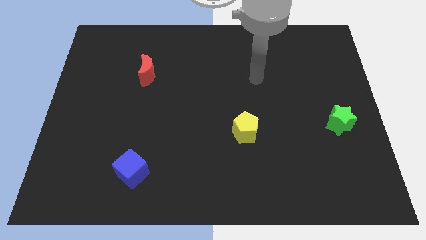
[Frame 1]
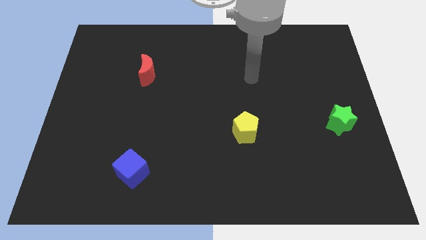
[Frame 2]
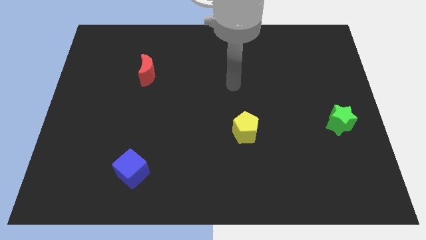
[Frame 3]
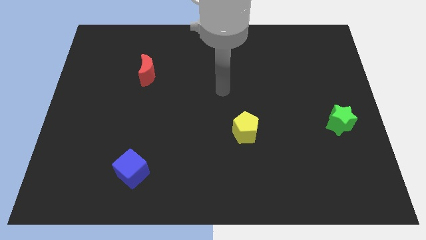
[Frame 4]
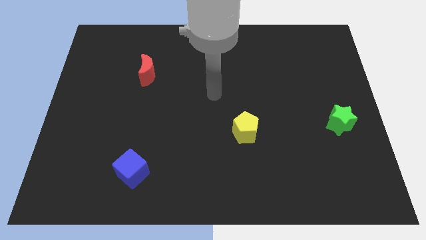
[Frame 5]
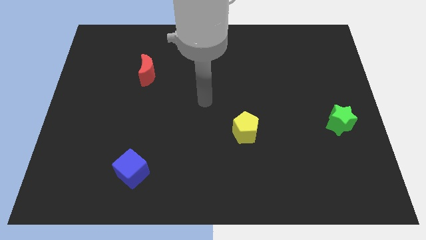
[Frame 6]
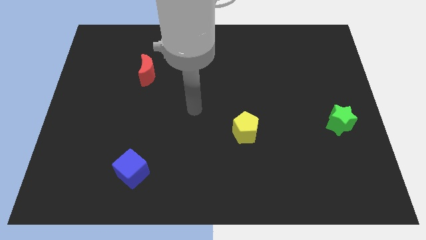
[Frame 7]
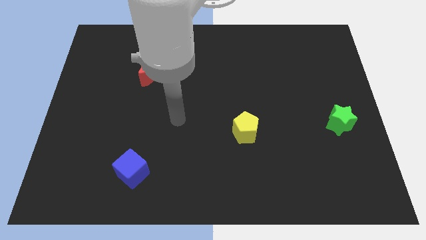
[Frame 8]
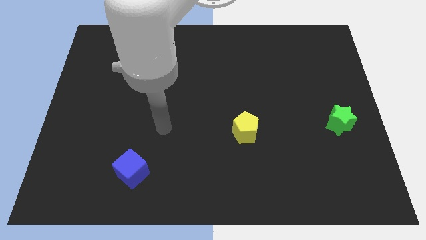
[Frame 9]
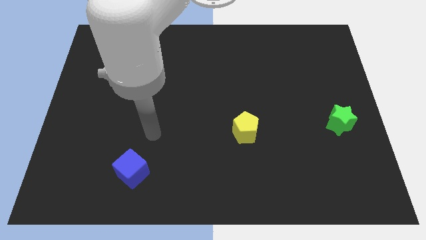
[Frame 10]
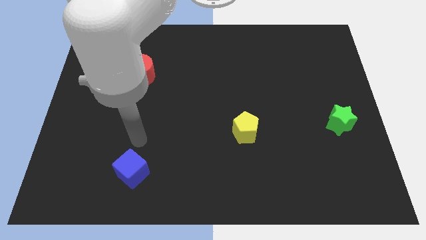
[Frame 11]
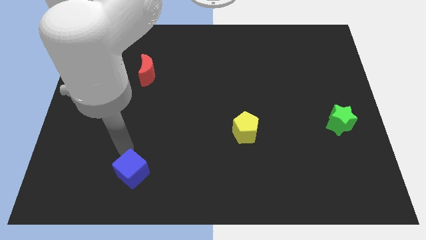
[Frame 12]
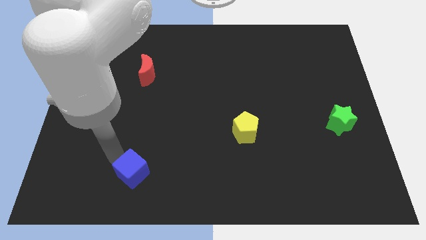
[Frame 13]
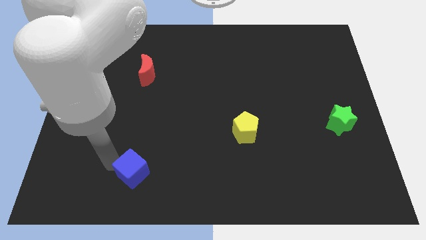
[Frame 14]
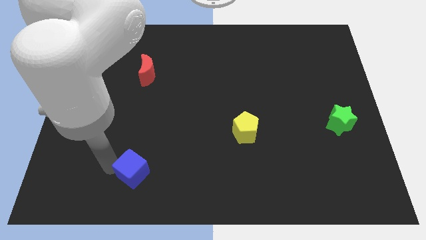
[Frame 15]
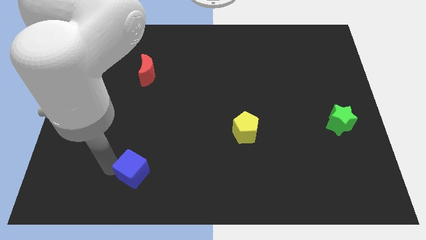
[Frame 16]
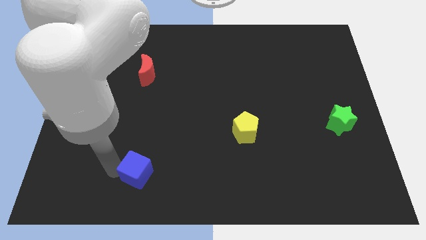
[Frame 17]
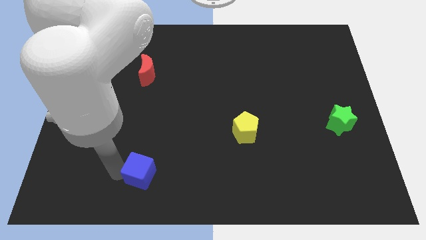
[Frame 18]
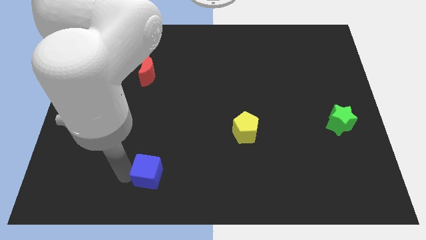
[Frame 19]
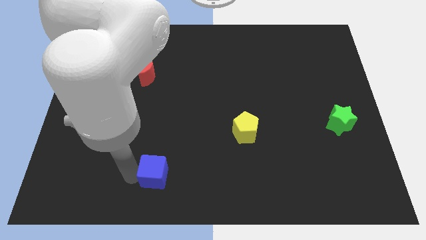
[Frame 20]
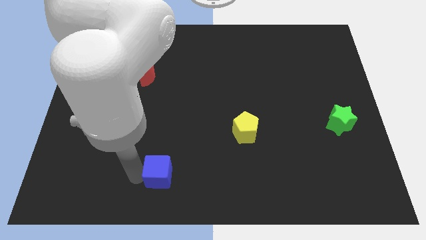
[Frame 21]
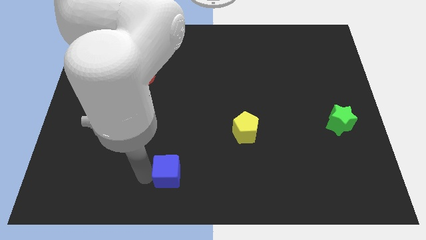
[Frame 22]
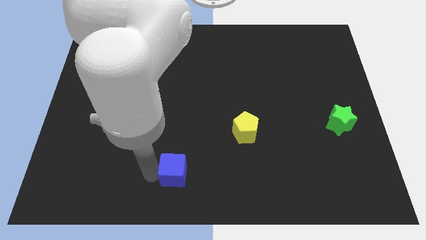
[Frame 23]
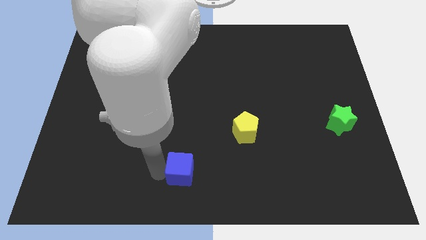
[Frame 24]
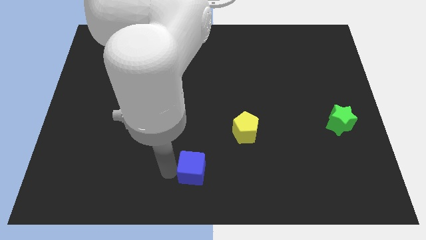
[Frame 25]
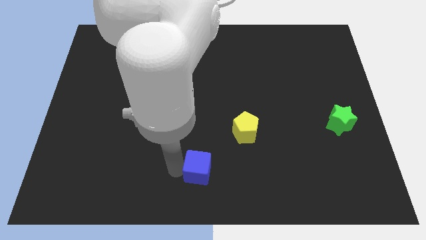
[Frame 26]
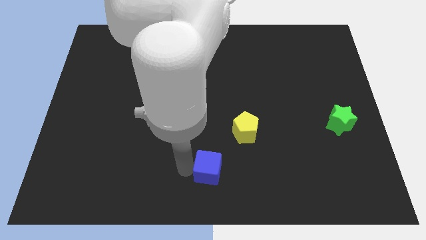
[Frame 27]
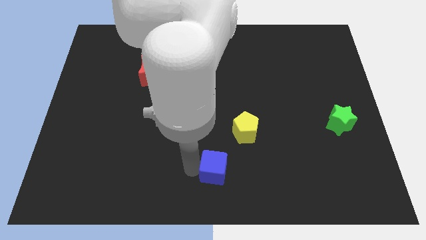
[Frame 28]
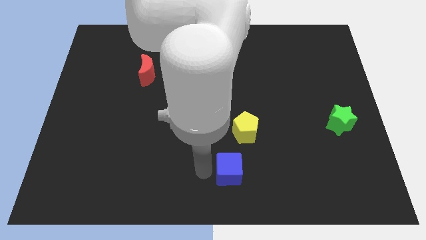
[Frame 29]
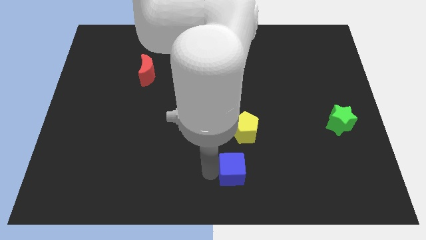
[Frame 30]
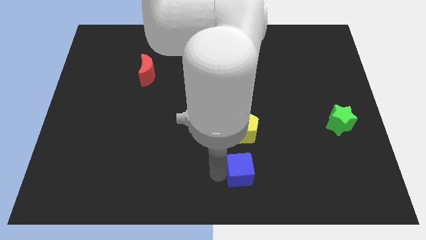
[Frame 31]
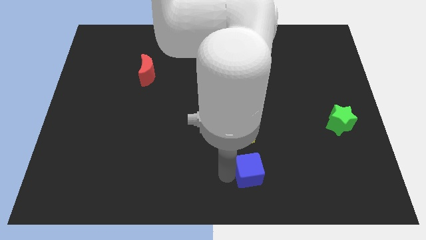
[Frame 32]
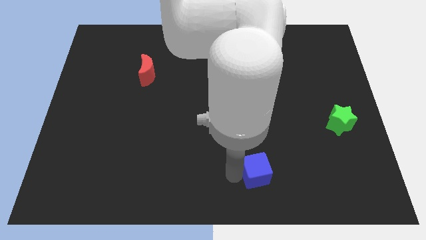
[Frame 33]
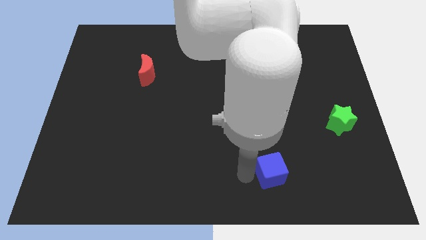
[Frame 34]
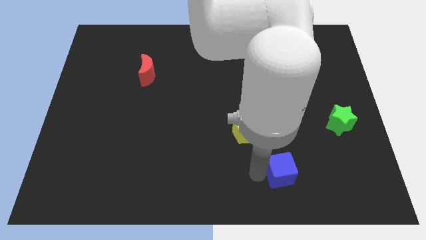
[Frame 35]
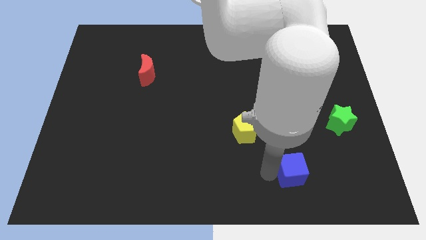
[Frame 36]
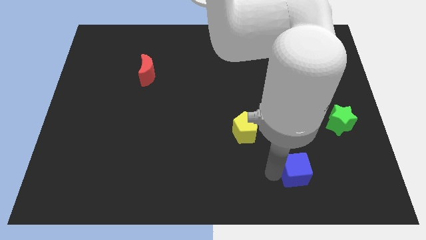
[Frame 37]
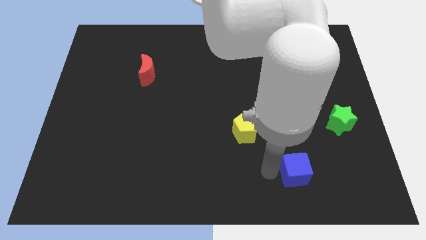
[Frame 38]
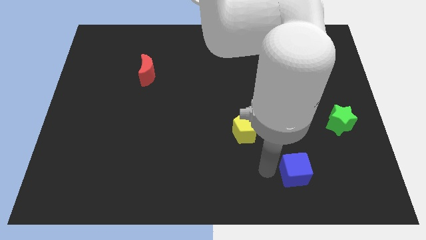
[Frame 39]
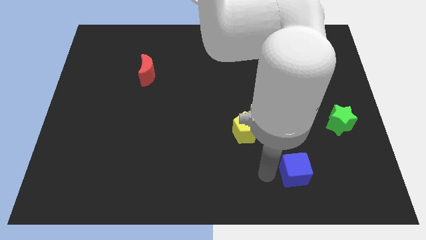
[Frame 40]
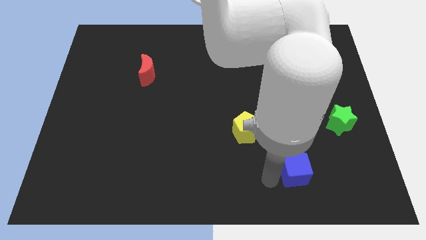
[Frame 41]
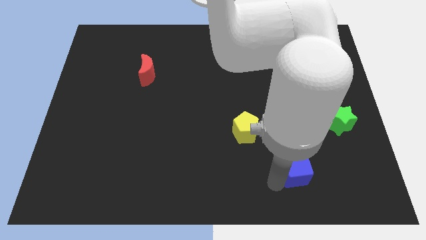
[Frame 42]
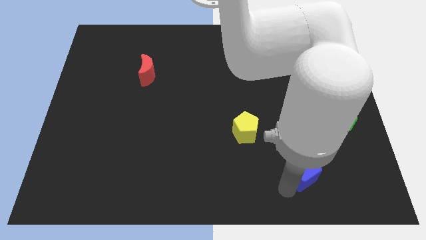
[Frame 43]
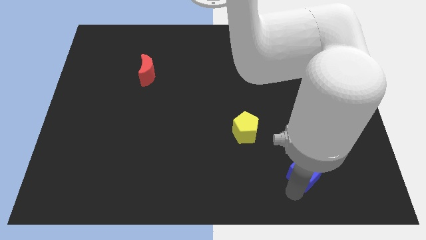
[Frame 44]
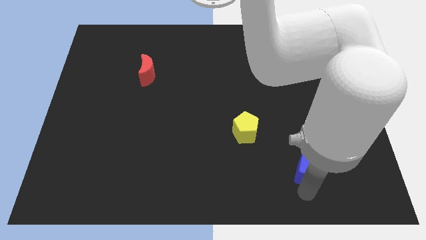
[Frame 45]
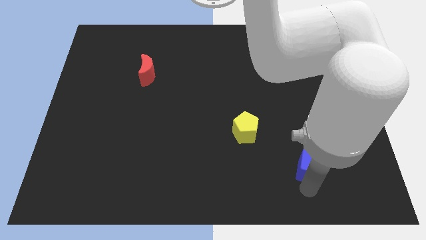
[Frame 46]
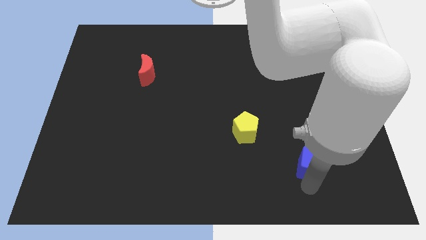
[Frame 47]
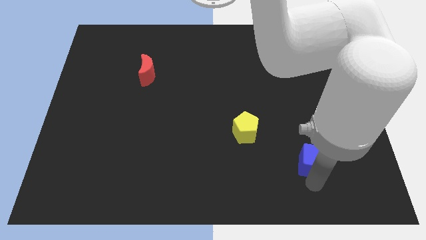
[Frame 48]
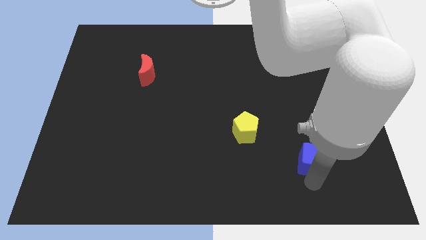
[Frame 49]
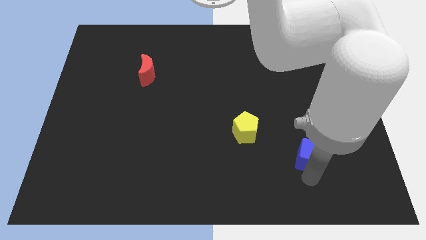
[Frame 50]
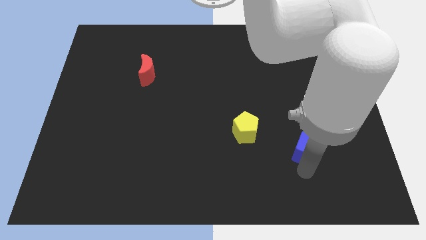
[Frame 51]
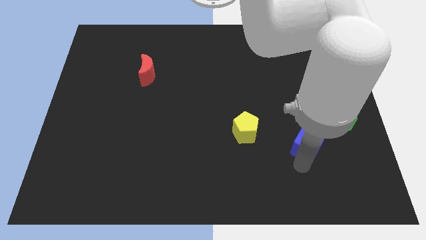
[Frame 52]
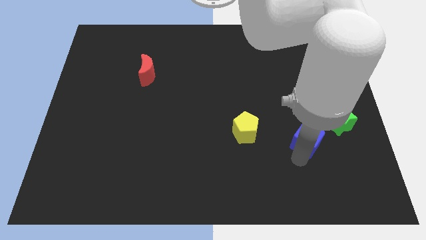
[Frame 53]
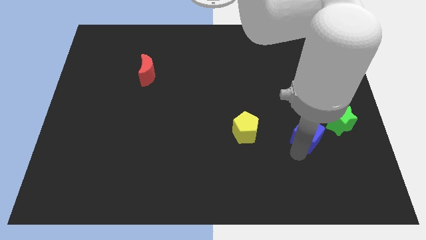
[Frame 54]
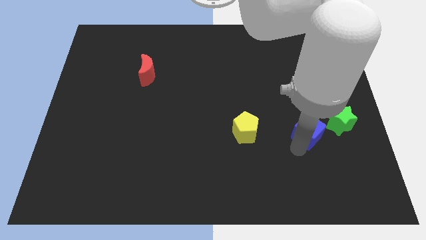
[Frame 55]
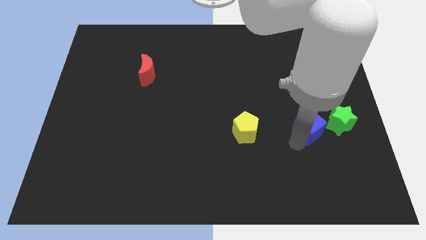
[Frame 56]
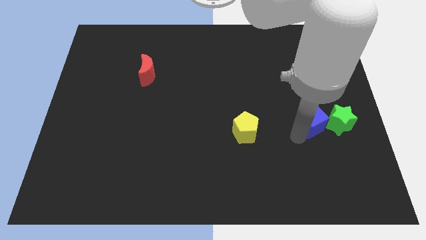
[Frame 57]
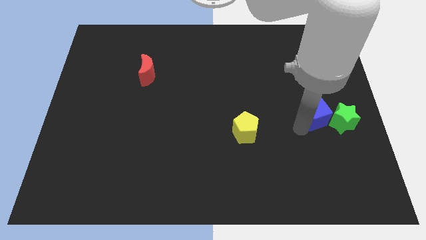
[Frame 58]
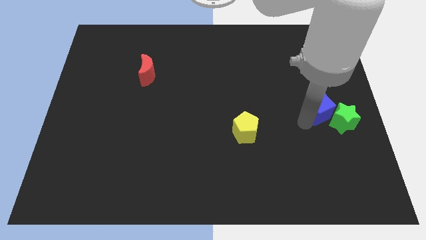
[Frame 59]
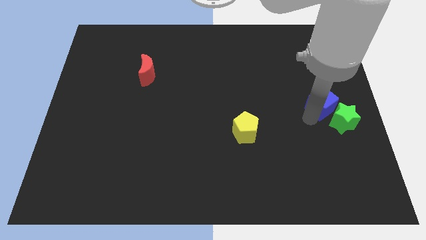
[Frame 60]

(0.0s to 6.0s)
move the cube close to the star

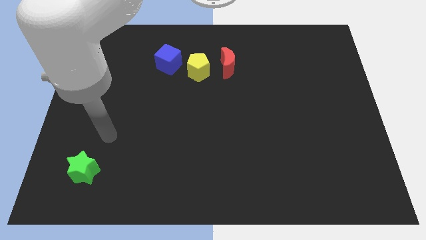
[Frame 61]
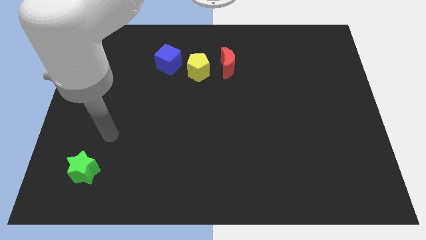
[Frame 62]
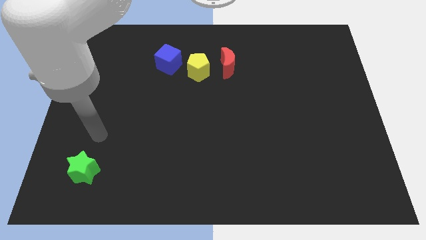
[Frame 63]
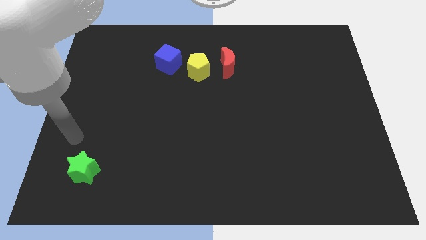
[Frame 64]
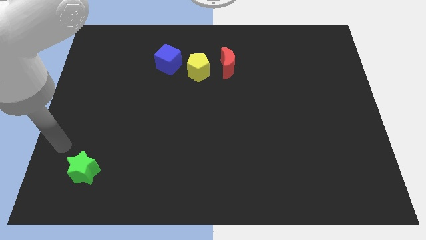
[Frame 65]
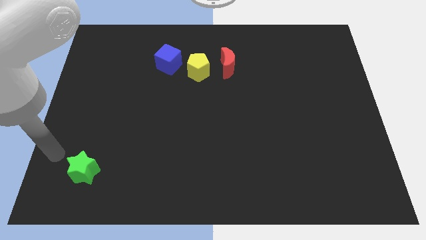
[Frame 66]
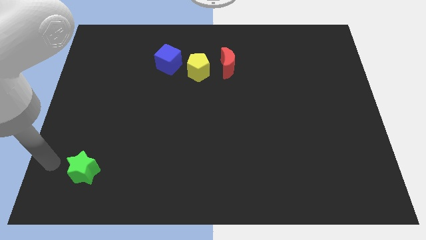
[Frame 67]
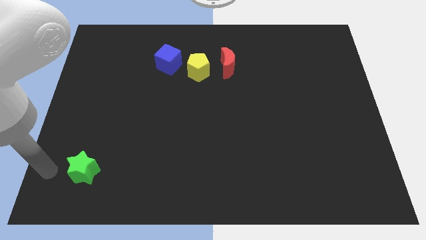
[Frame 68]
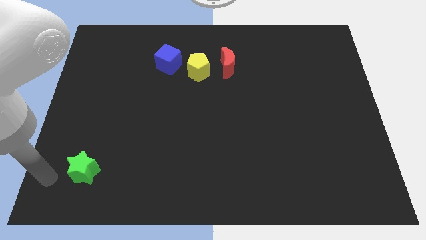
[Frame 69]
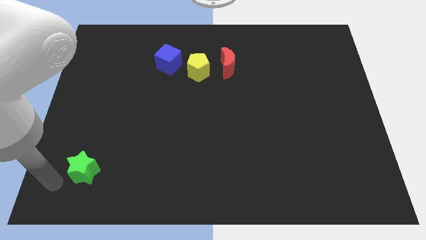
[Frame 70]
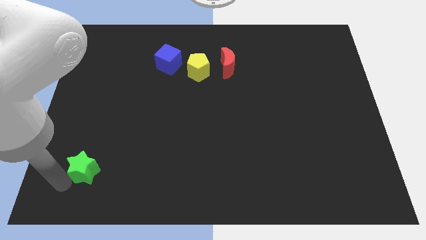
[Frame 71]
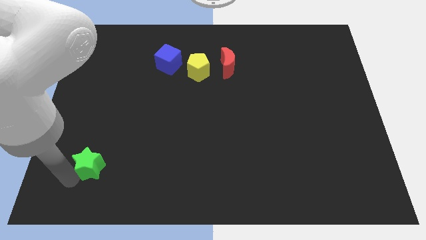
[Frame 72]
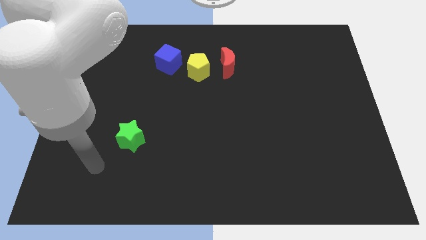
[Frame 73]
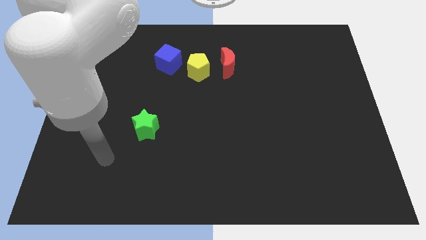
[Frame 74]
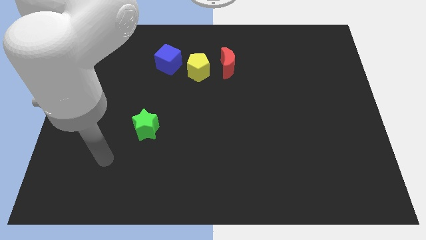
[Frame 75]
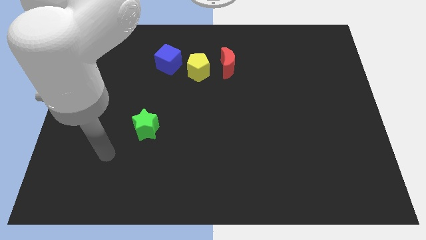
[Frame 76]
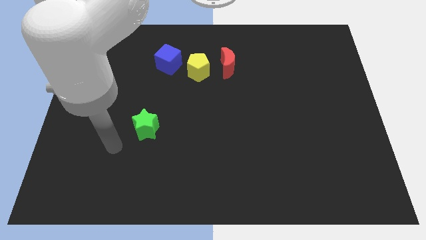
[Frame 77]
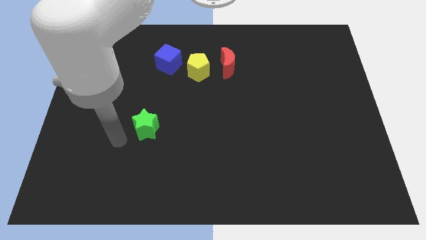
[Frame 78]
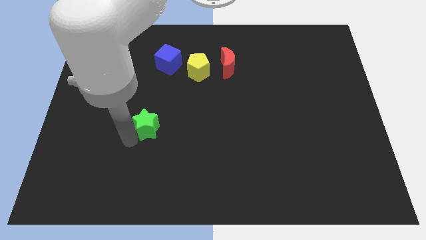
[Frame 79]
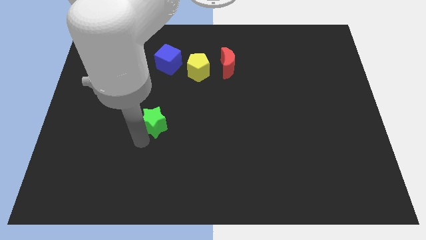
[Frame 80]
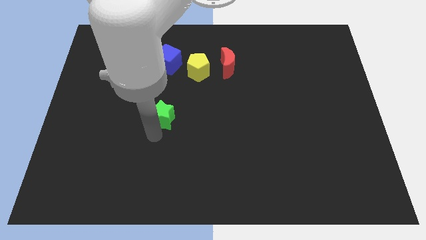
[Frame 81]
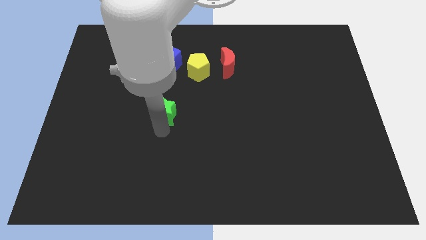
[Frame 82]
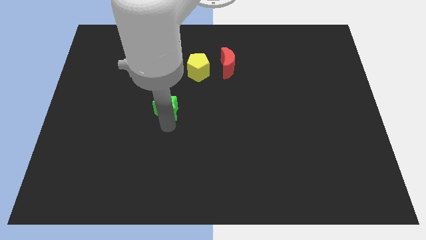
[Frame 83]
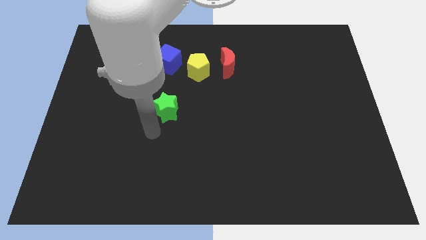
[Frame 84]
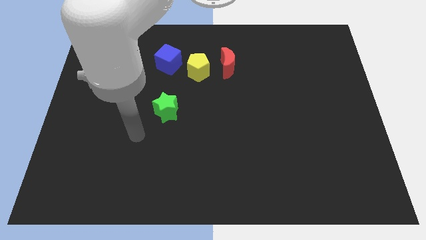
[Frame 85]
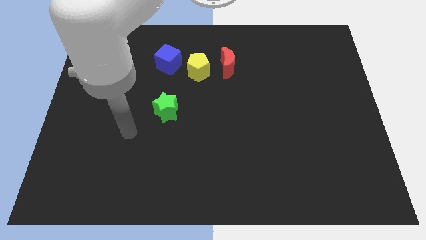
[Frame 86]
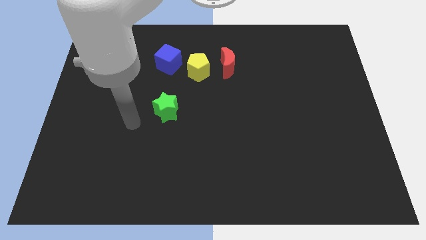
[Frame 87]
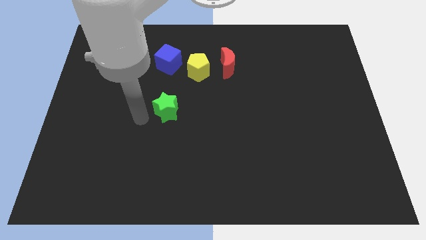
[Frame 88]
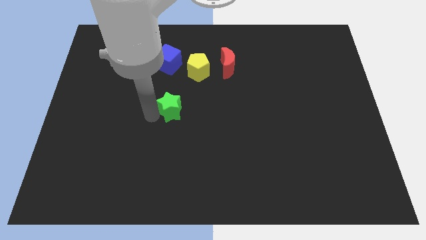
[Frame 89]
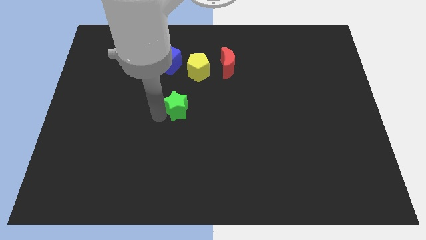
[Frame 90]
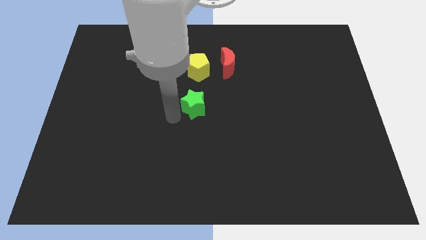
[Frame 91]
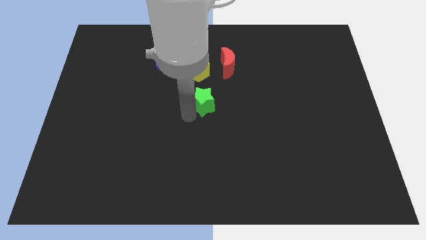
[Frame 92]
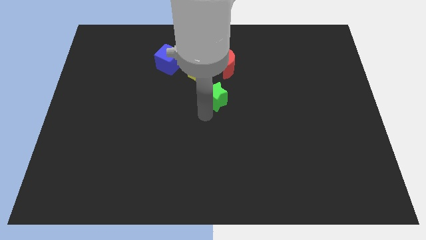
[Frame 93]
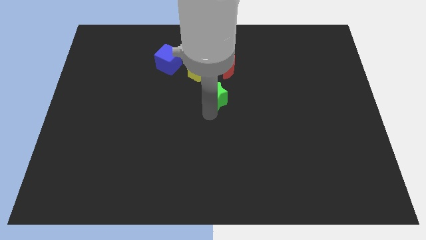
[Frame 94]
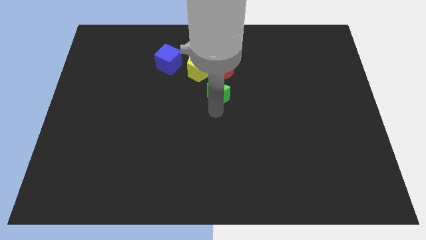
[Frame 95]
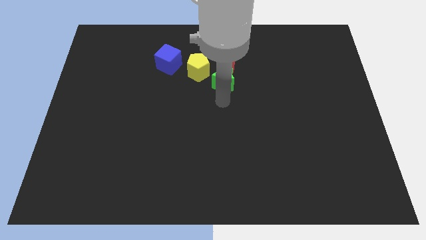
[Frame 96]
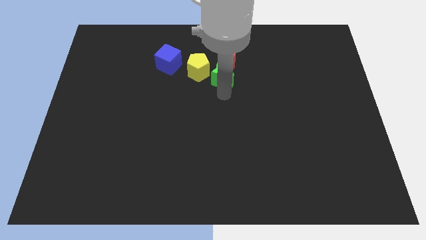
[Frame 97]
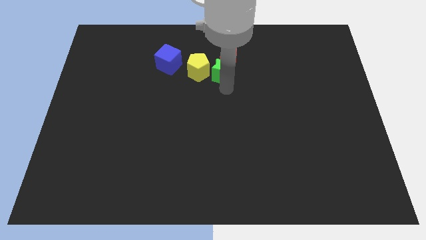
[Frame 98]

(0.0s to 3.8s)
slide the star to the red block
